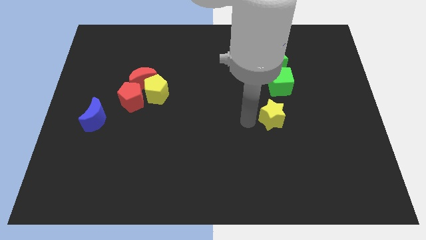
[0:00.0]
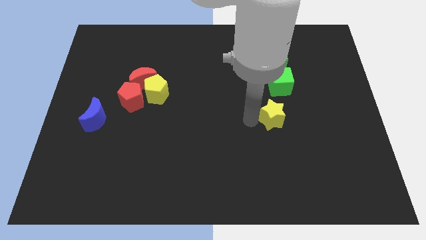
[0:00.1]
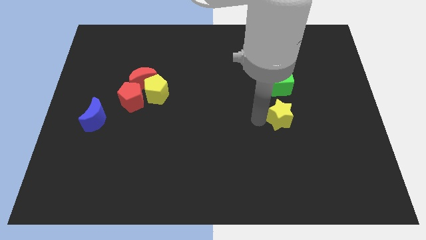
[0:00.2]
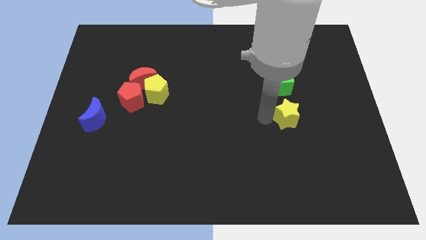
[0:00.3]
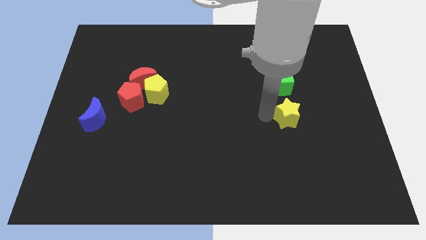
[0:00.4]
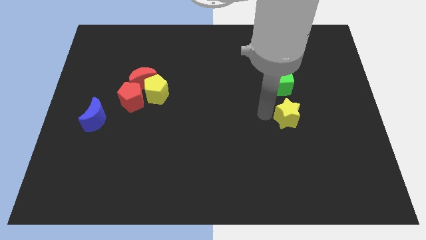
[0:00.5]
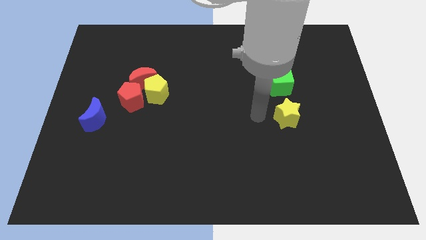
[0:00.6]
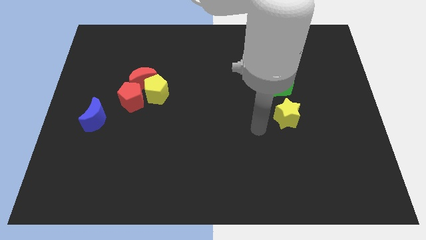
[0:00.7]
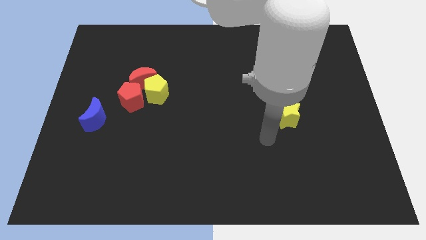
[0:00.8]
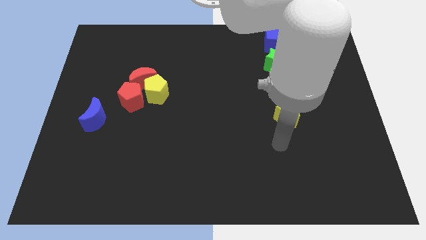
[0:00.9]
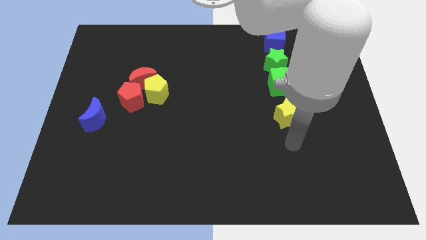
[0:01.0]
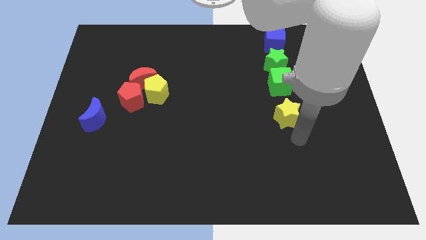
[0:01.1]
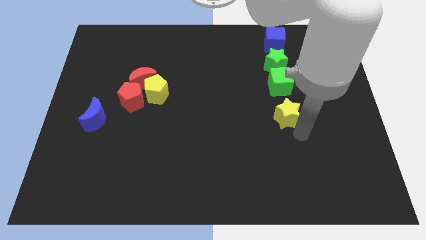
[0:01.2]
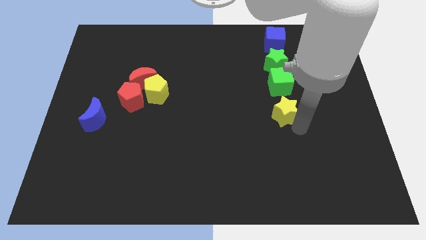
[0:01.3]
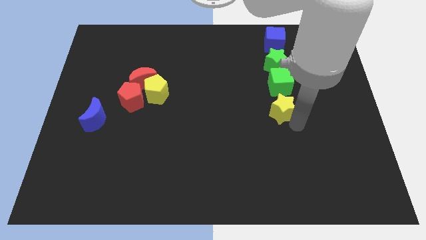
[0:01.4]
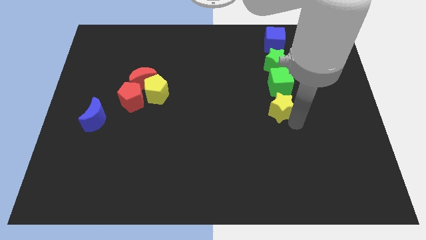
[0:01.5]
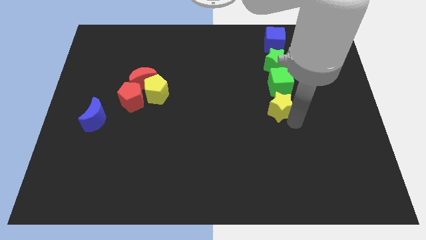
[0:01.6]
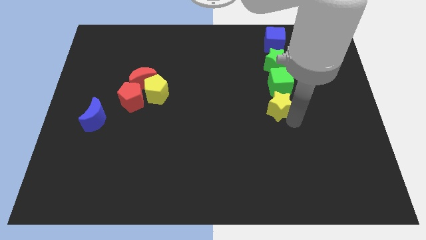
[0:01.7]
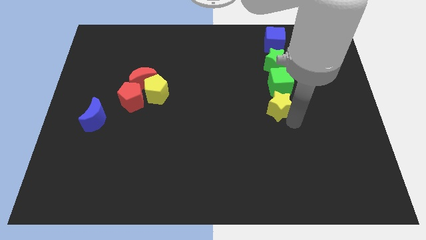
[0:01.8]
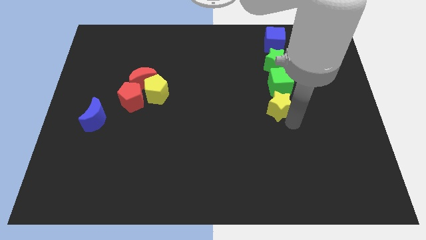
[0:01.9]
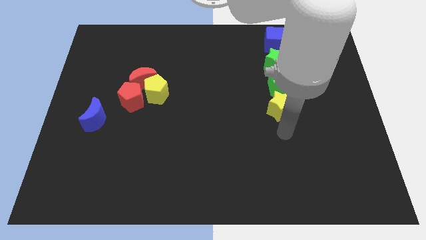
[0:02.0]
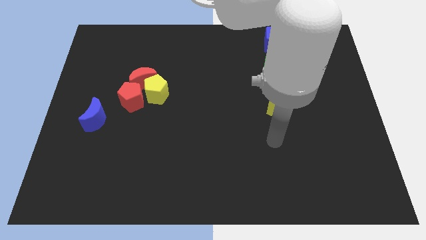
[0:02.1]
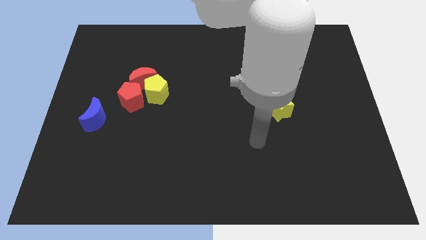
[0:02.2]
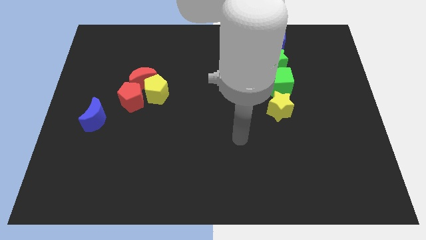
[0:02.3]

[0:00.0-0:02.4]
push the yellow star down to the green cube to form vertical line

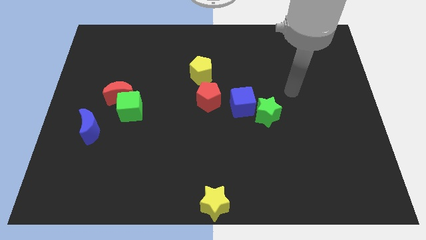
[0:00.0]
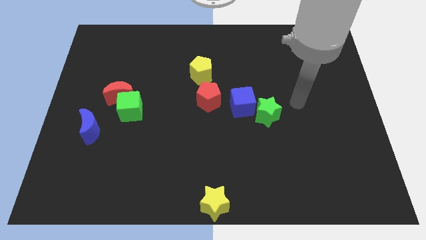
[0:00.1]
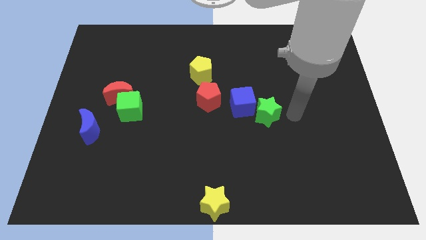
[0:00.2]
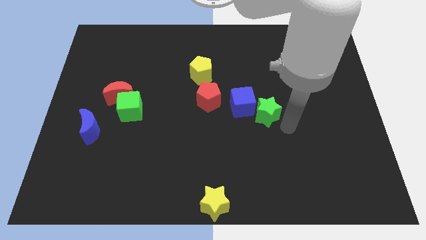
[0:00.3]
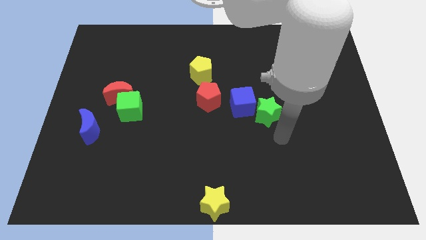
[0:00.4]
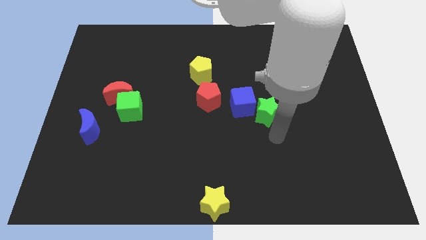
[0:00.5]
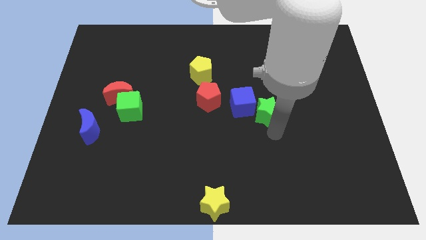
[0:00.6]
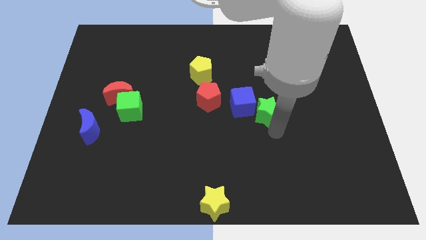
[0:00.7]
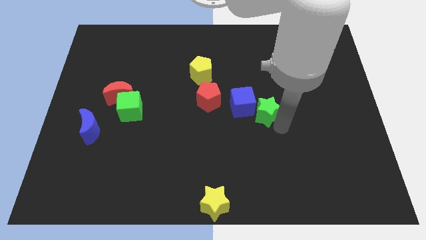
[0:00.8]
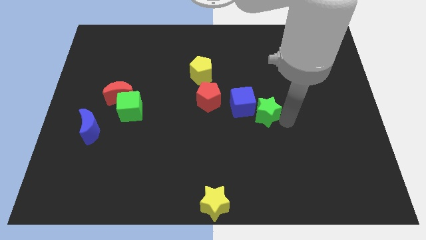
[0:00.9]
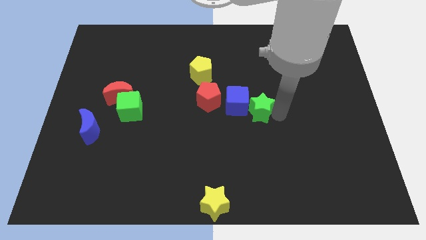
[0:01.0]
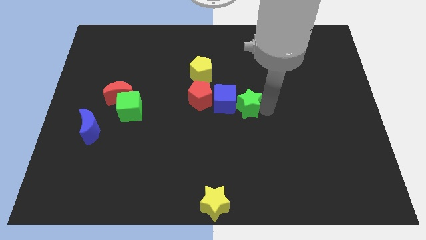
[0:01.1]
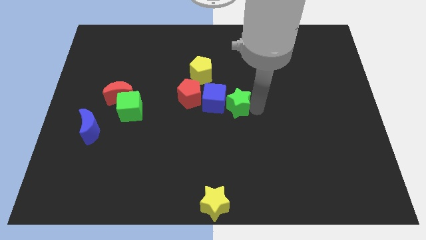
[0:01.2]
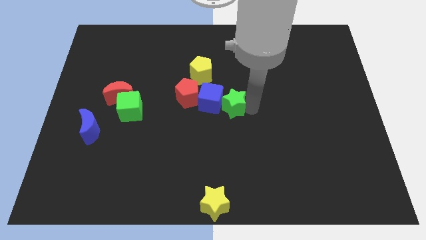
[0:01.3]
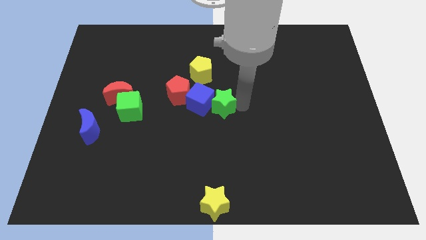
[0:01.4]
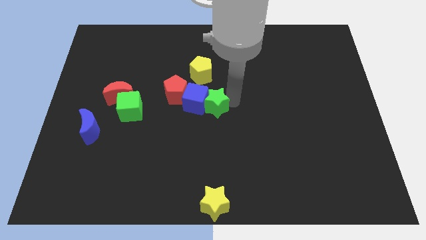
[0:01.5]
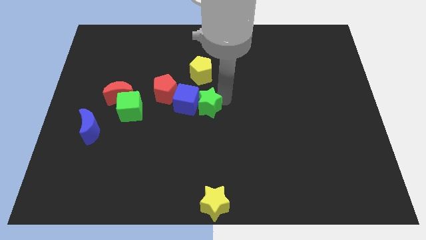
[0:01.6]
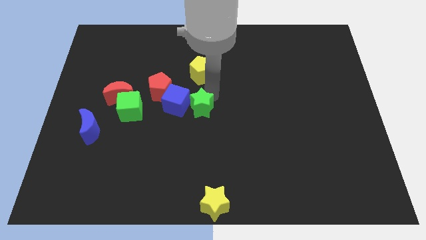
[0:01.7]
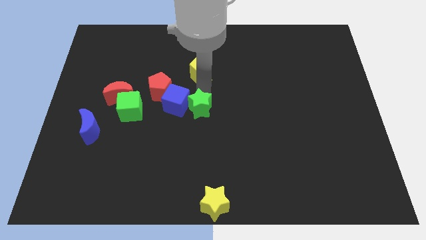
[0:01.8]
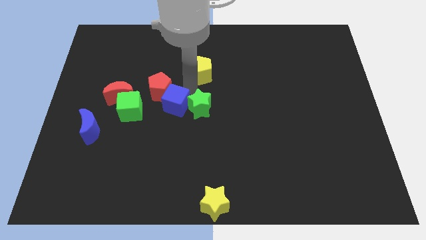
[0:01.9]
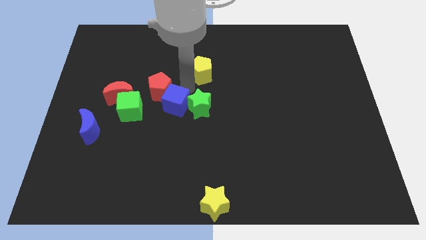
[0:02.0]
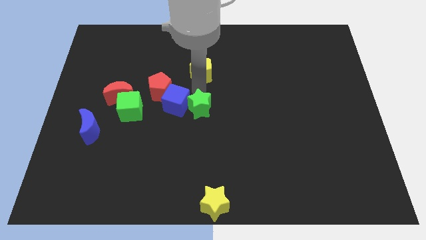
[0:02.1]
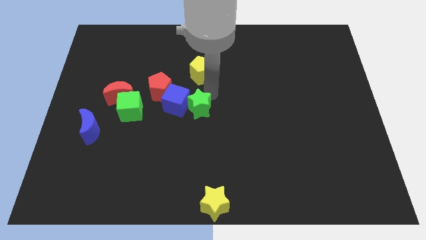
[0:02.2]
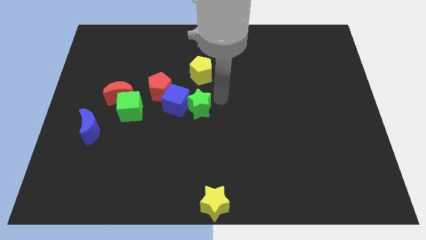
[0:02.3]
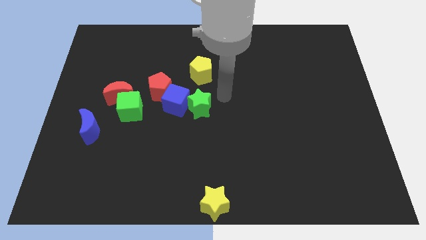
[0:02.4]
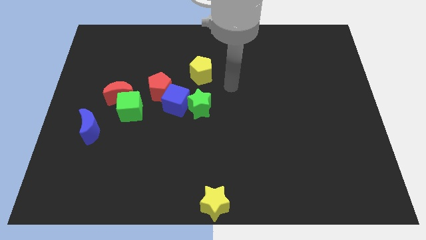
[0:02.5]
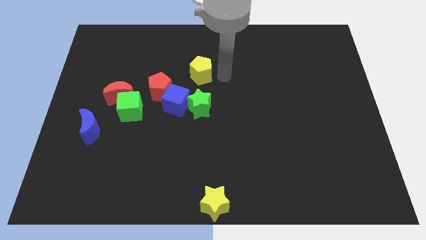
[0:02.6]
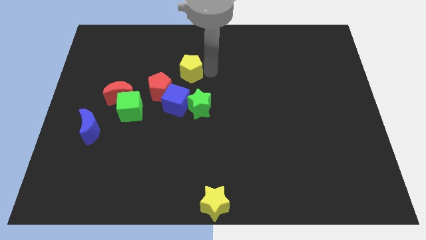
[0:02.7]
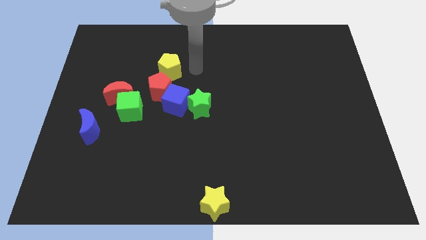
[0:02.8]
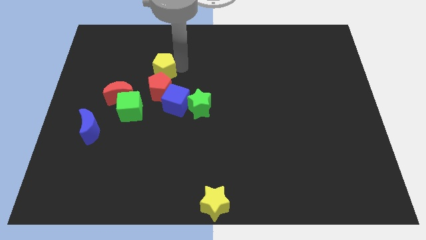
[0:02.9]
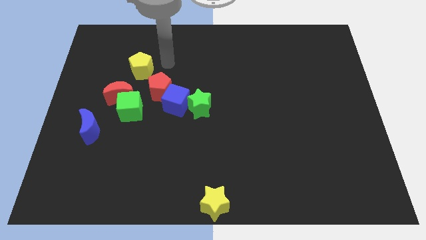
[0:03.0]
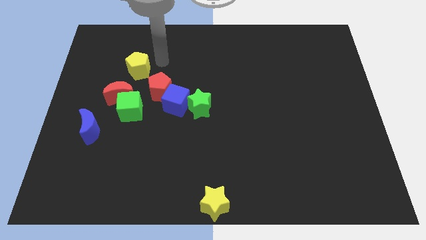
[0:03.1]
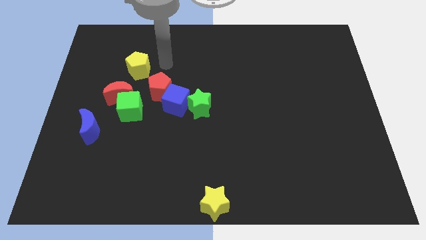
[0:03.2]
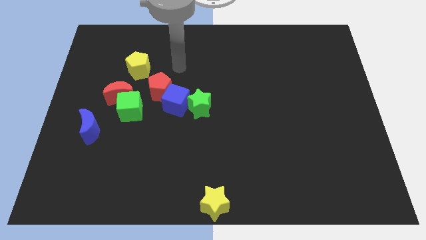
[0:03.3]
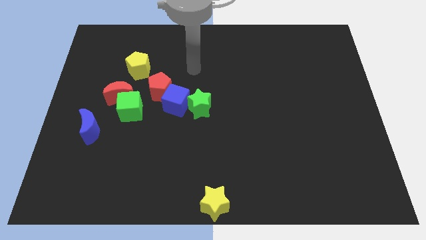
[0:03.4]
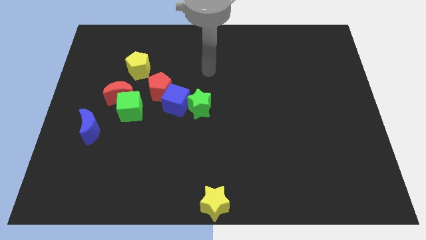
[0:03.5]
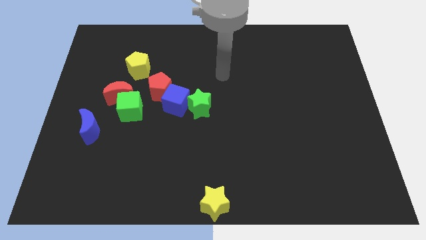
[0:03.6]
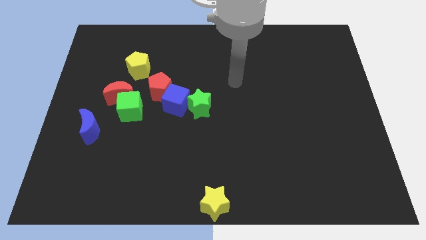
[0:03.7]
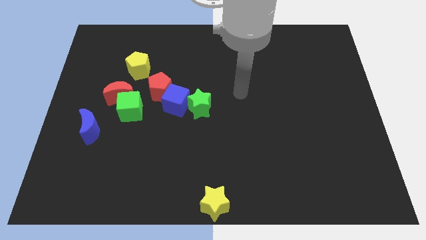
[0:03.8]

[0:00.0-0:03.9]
place green star blue cube red pentagon and the yellow pentagon in a line

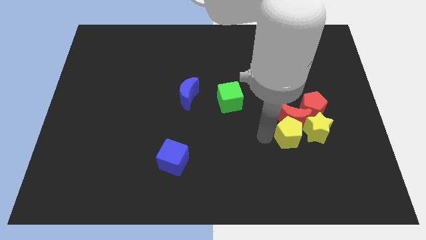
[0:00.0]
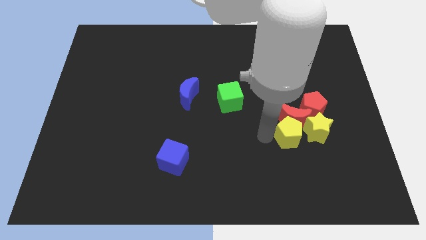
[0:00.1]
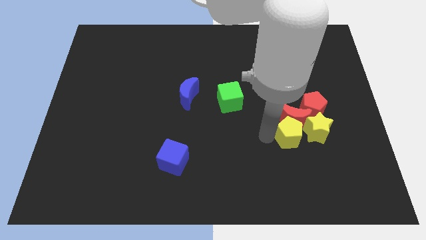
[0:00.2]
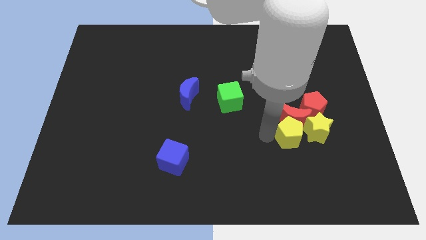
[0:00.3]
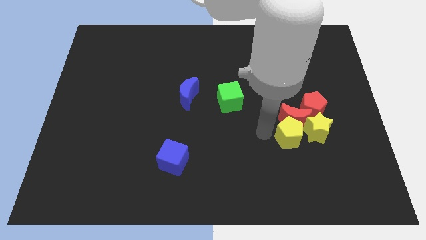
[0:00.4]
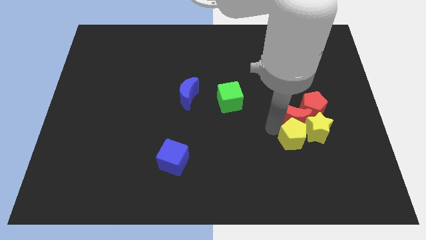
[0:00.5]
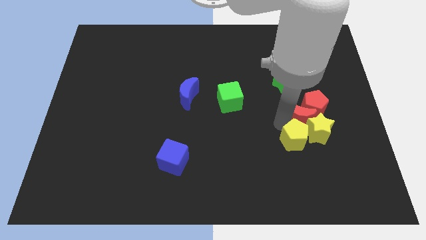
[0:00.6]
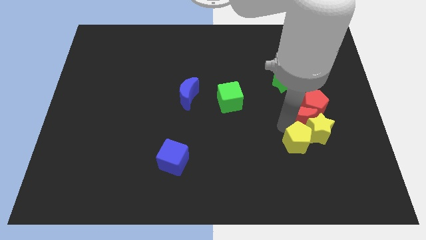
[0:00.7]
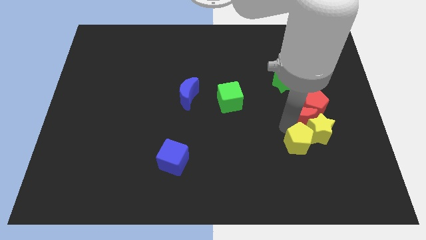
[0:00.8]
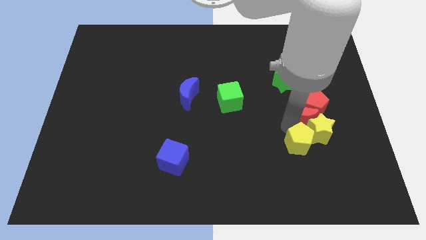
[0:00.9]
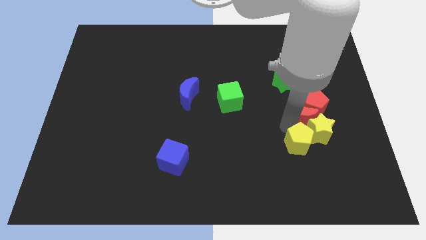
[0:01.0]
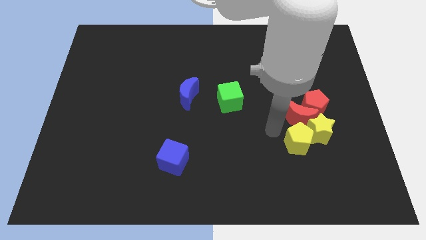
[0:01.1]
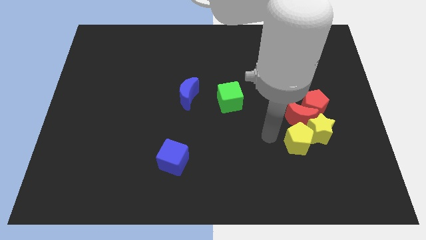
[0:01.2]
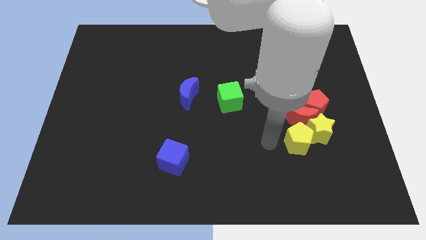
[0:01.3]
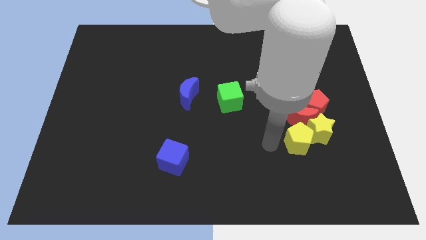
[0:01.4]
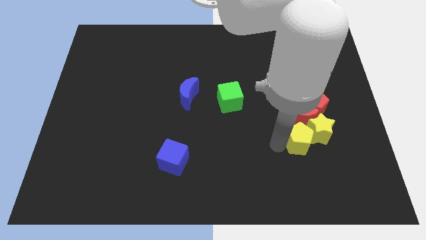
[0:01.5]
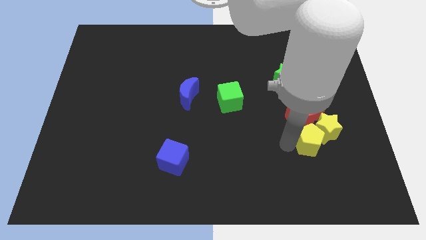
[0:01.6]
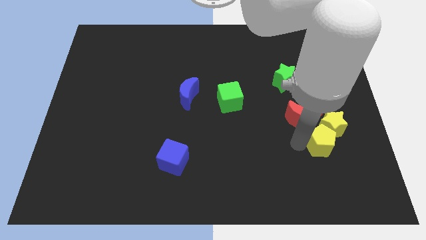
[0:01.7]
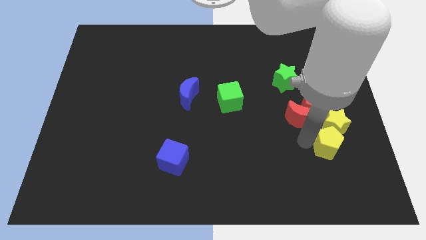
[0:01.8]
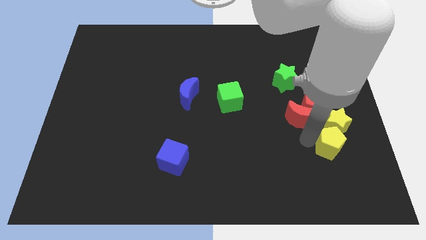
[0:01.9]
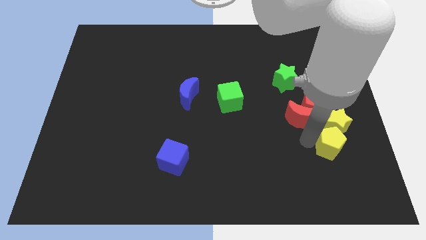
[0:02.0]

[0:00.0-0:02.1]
move the yellow pentagon to the bottom of the yellow star

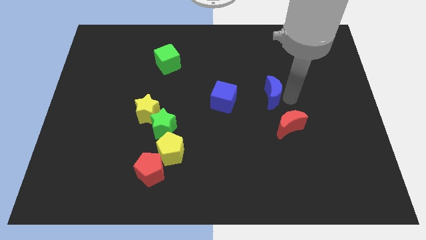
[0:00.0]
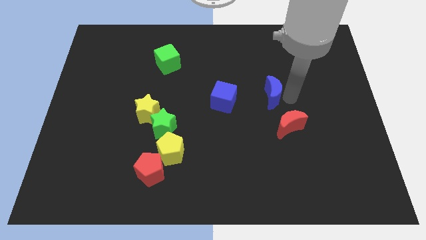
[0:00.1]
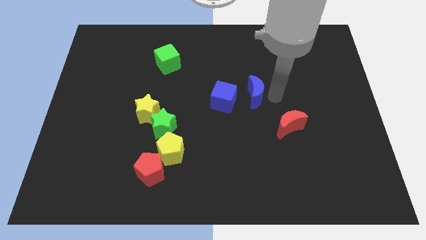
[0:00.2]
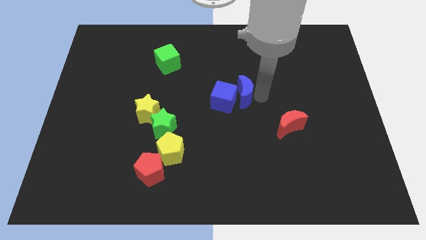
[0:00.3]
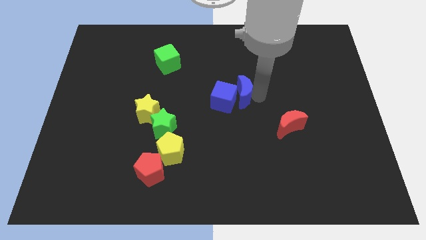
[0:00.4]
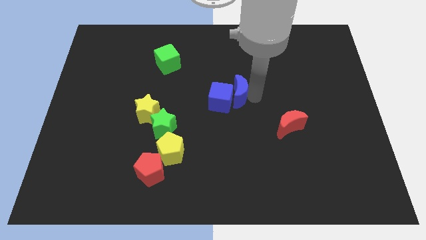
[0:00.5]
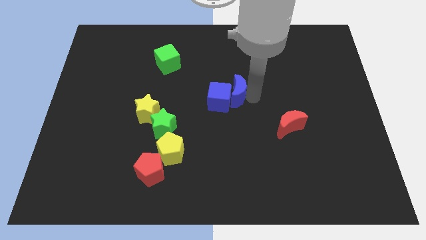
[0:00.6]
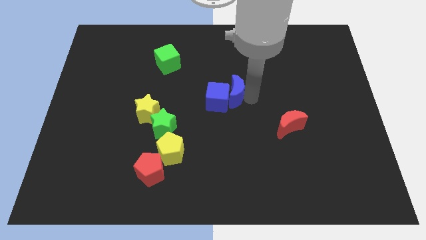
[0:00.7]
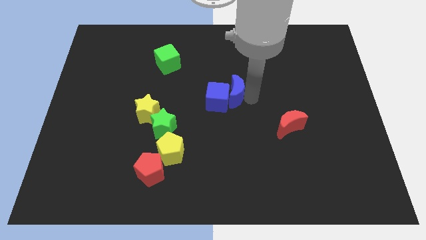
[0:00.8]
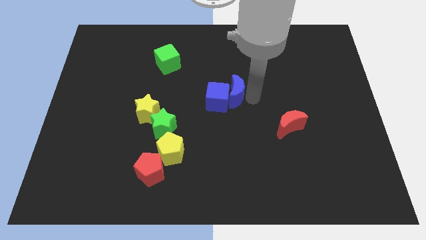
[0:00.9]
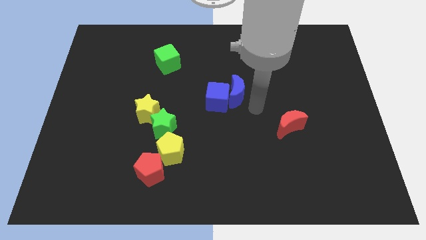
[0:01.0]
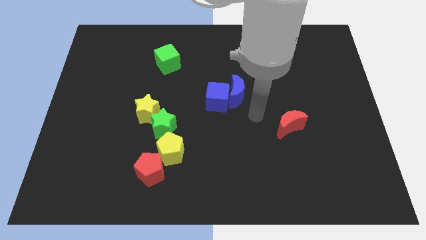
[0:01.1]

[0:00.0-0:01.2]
slightly push the blue moon into blue cube
